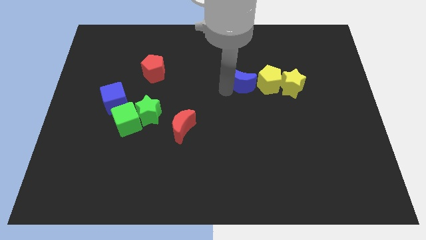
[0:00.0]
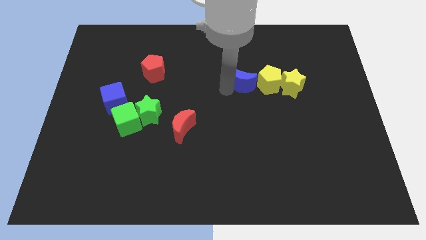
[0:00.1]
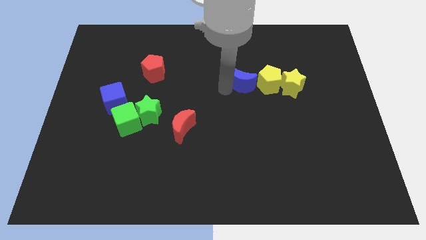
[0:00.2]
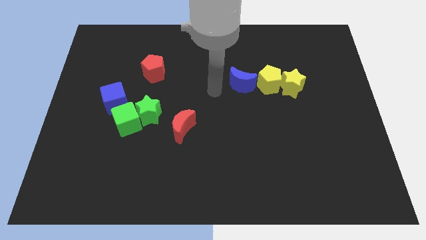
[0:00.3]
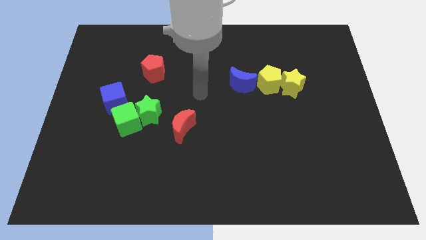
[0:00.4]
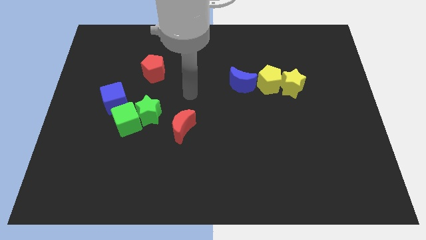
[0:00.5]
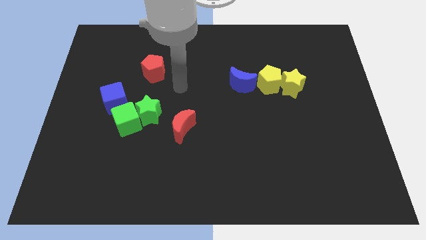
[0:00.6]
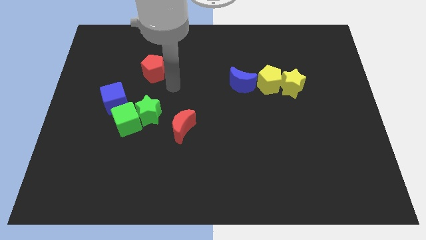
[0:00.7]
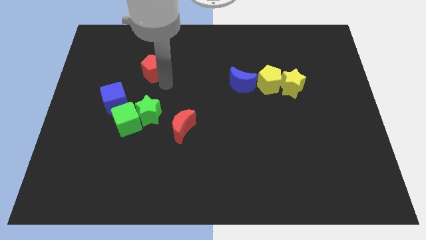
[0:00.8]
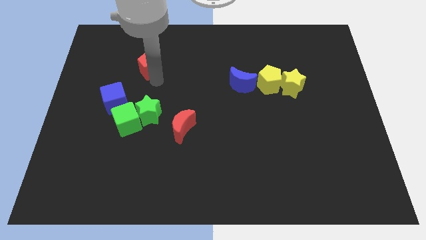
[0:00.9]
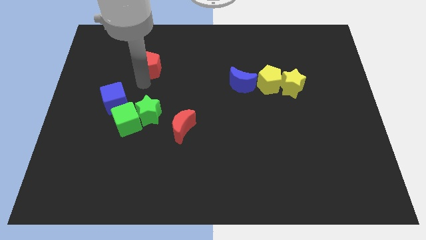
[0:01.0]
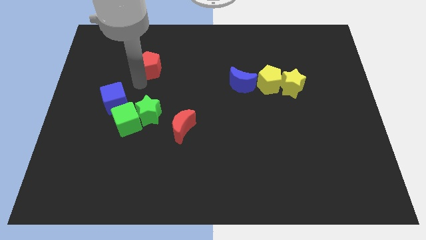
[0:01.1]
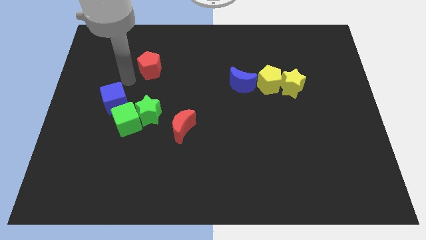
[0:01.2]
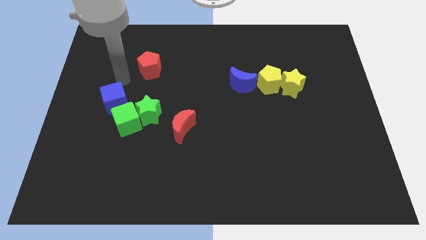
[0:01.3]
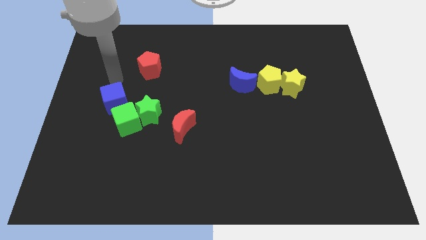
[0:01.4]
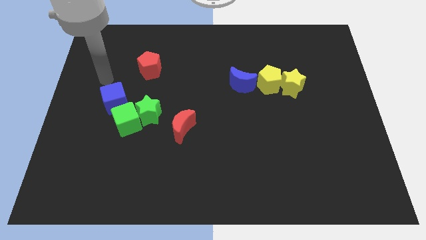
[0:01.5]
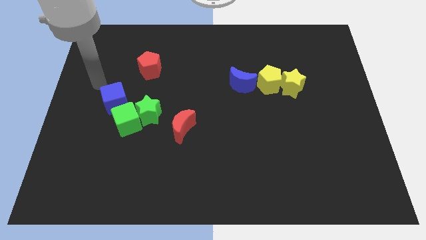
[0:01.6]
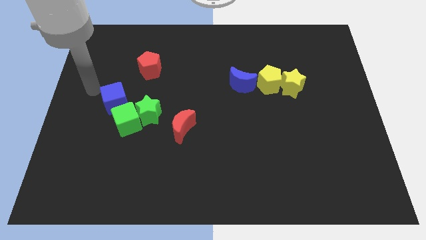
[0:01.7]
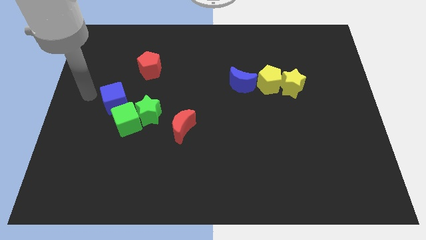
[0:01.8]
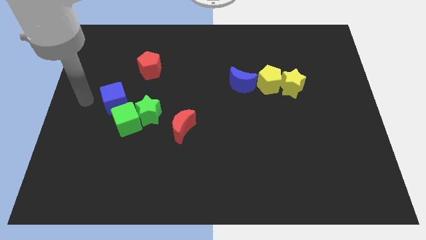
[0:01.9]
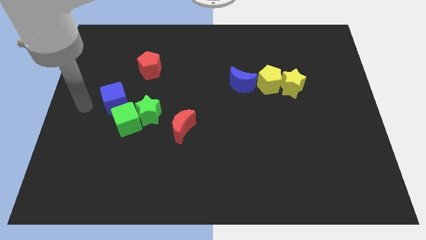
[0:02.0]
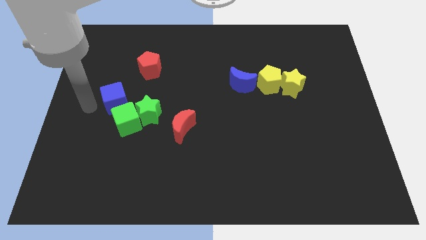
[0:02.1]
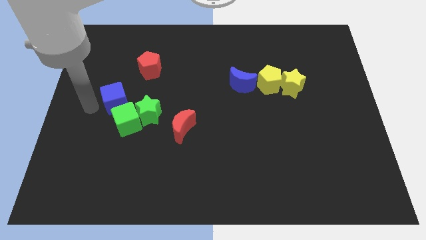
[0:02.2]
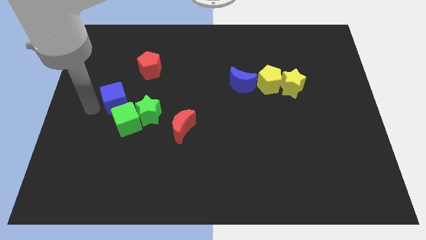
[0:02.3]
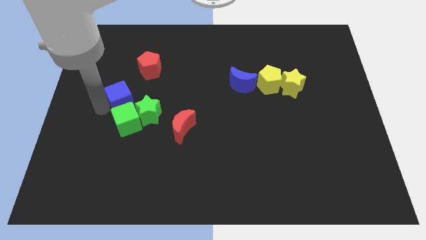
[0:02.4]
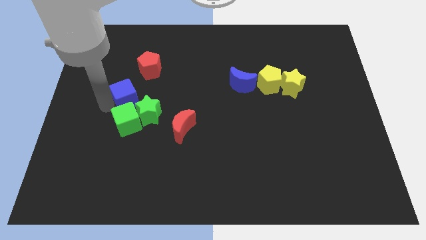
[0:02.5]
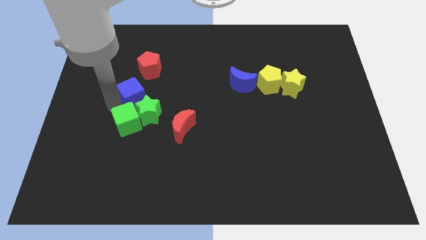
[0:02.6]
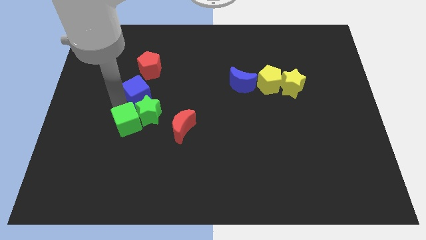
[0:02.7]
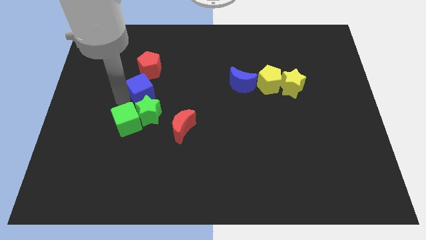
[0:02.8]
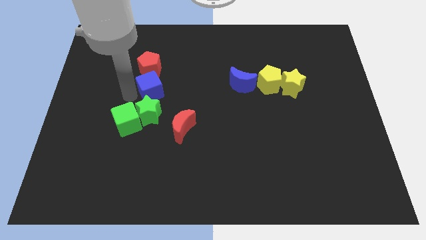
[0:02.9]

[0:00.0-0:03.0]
place blue cube to the bottom of red pentagon

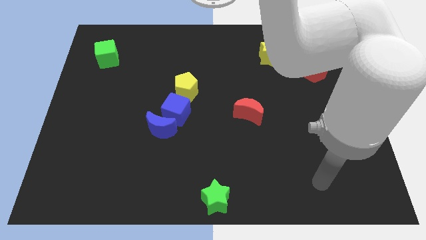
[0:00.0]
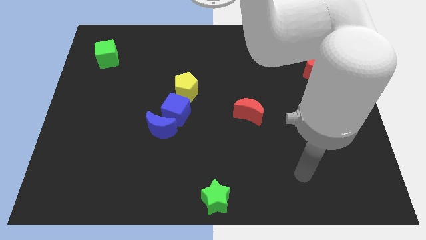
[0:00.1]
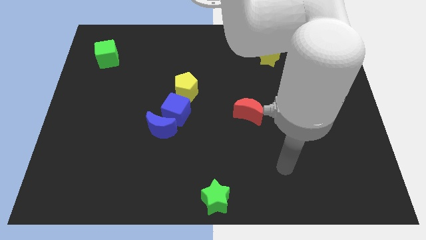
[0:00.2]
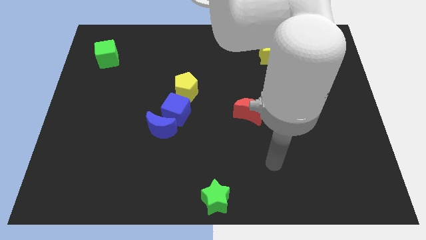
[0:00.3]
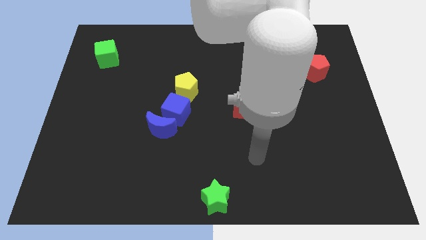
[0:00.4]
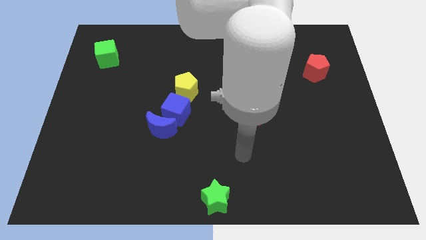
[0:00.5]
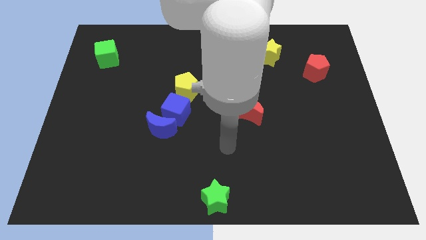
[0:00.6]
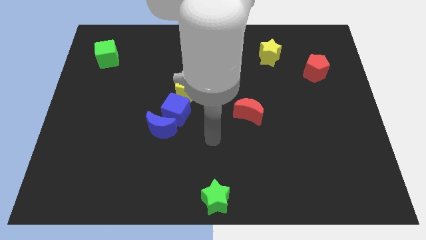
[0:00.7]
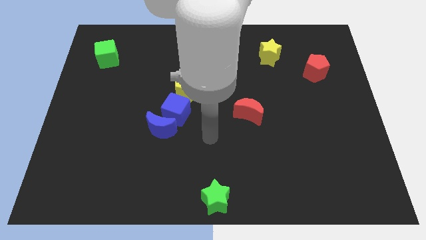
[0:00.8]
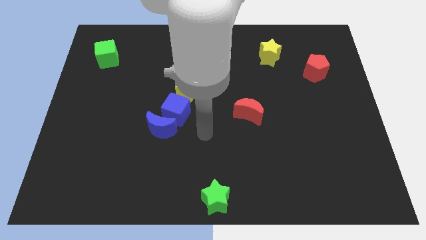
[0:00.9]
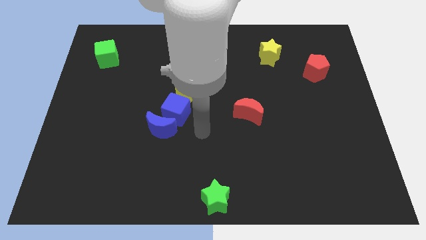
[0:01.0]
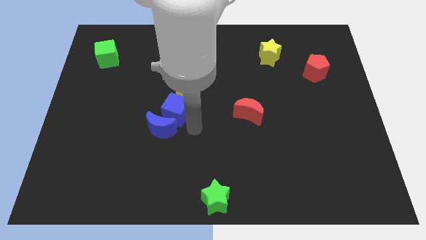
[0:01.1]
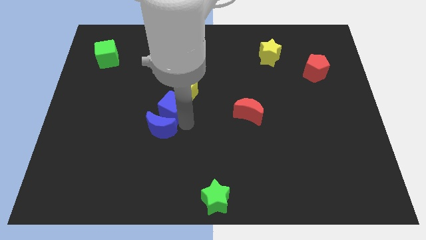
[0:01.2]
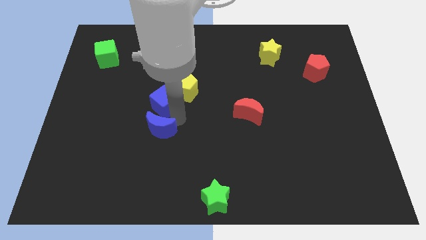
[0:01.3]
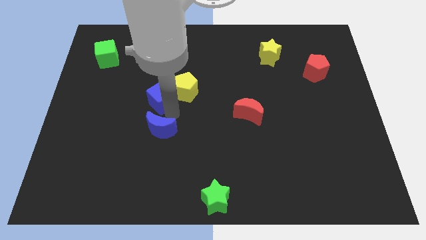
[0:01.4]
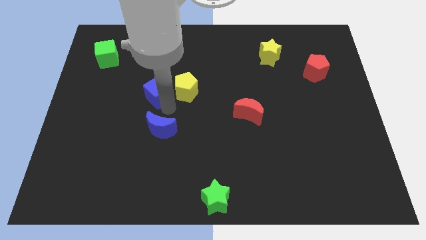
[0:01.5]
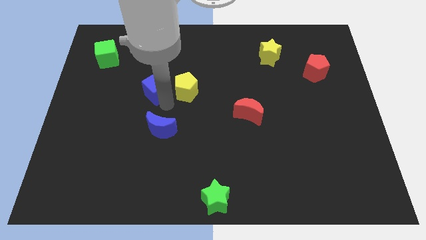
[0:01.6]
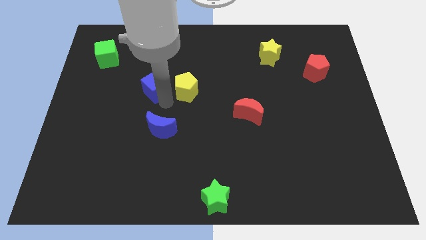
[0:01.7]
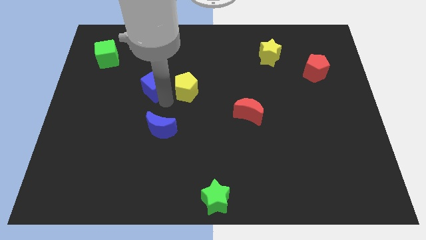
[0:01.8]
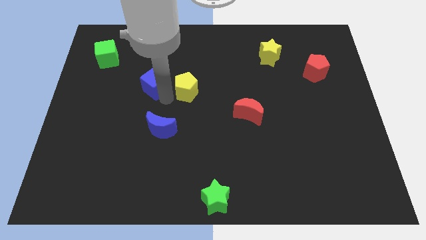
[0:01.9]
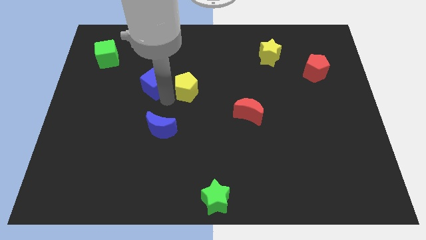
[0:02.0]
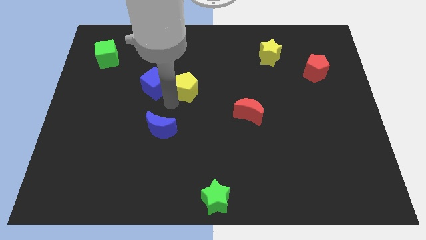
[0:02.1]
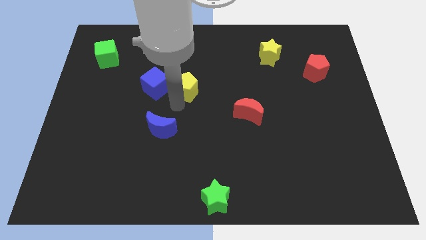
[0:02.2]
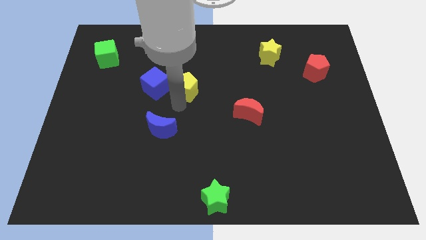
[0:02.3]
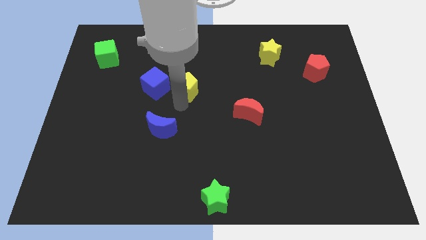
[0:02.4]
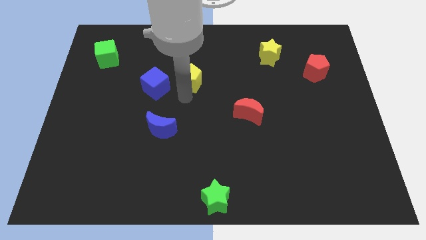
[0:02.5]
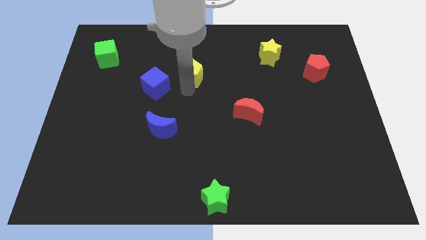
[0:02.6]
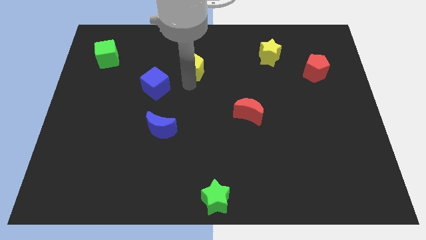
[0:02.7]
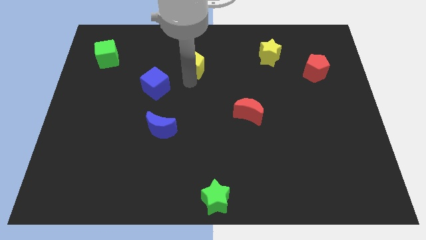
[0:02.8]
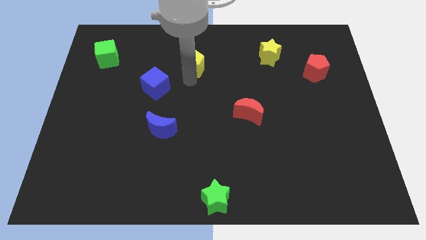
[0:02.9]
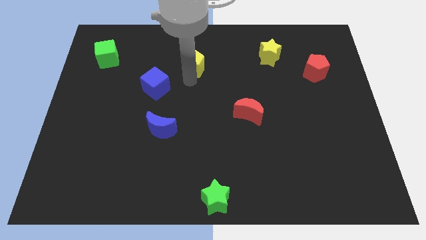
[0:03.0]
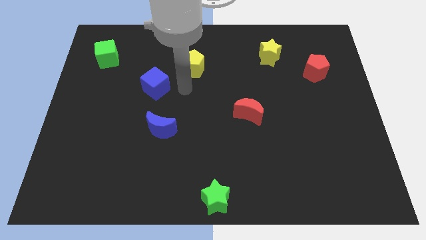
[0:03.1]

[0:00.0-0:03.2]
slightly move the yellow pentagon towards the top

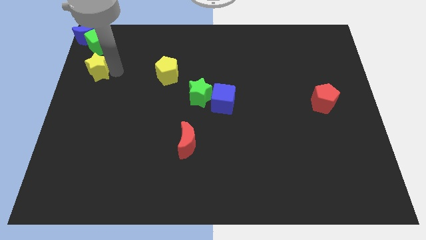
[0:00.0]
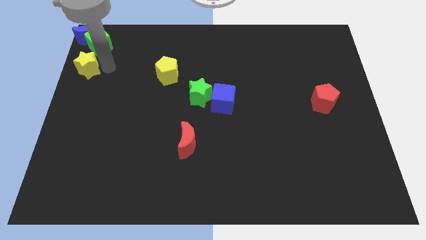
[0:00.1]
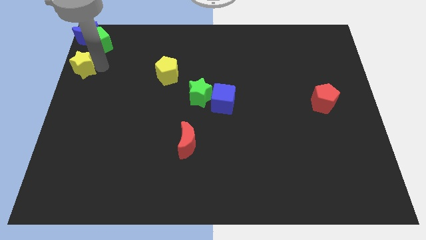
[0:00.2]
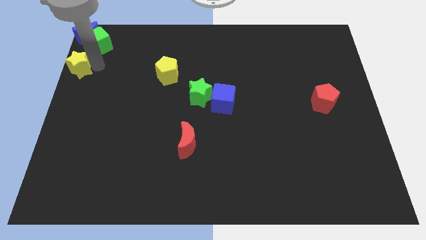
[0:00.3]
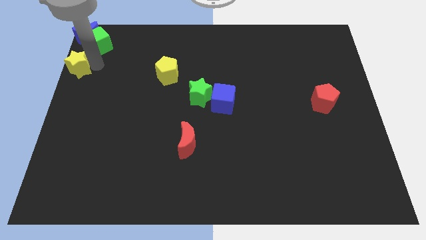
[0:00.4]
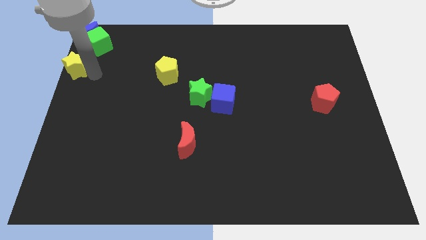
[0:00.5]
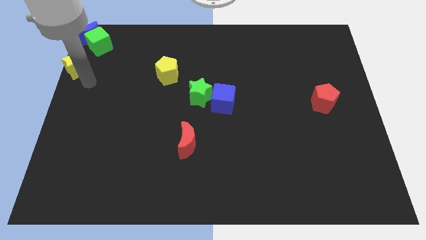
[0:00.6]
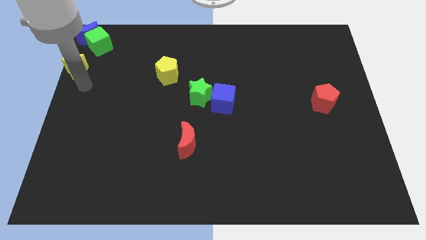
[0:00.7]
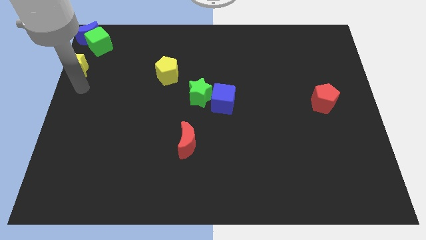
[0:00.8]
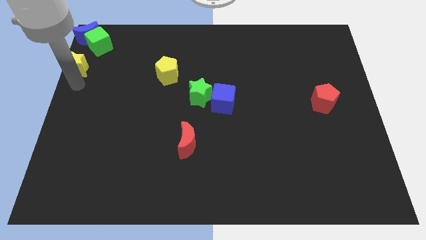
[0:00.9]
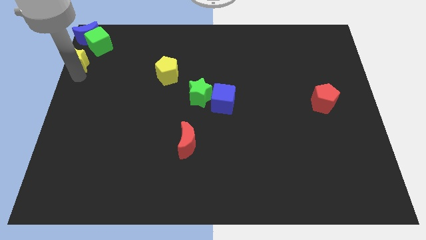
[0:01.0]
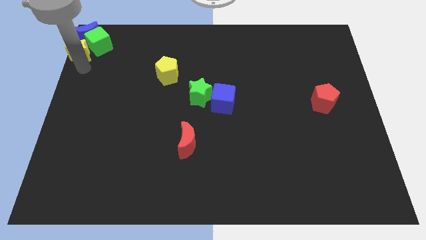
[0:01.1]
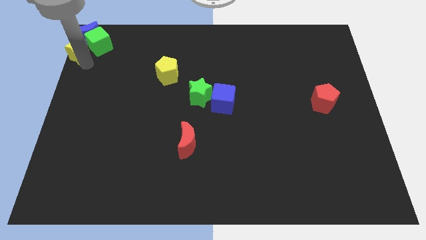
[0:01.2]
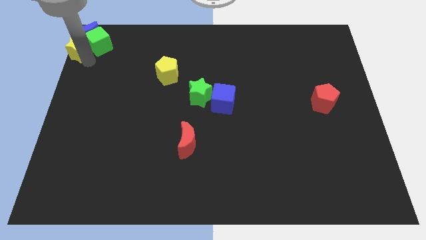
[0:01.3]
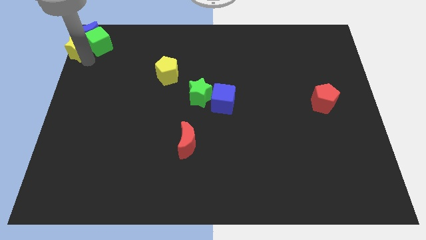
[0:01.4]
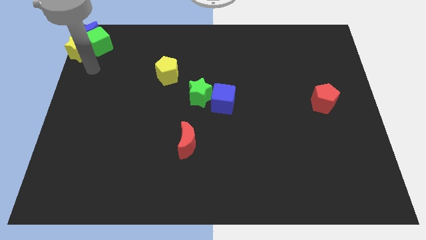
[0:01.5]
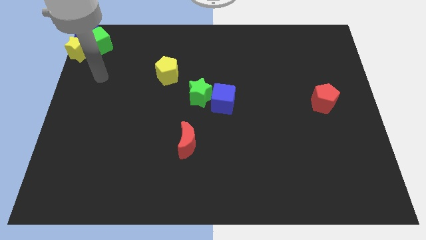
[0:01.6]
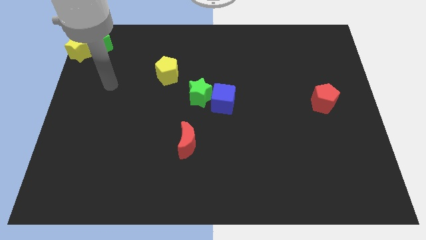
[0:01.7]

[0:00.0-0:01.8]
place the yellow star below blue moon

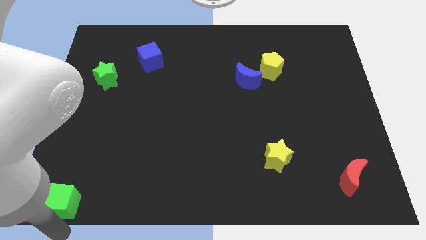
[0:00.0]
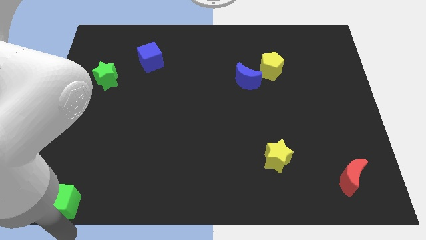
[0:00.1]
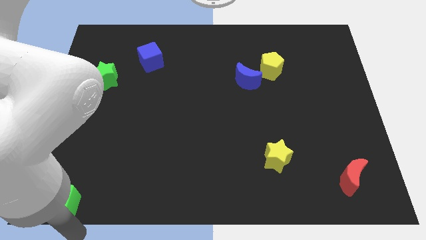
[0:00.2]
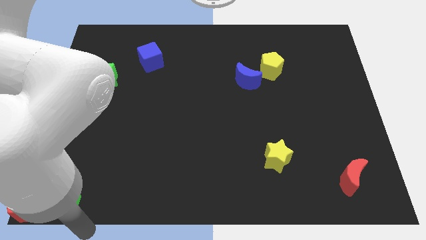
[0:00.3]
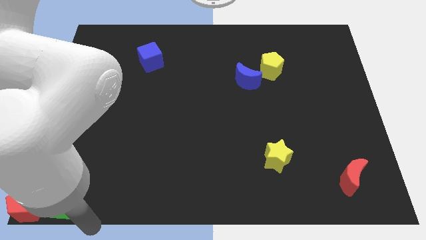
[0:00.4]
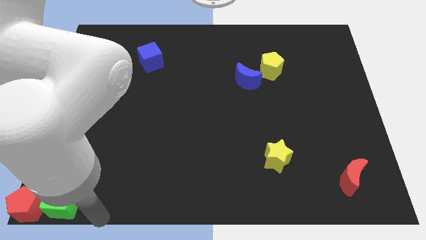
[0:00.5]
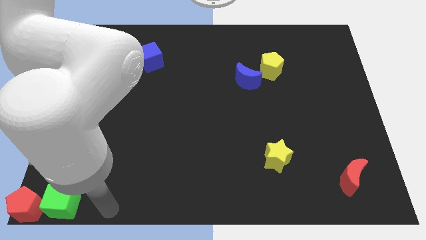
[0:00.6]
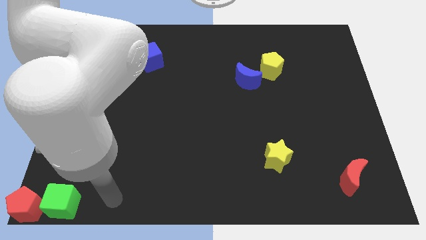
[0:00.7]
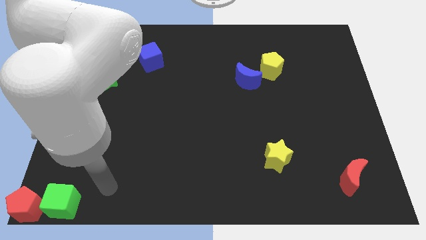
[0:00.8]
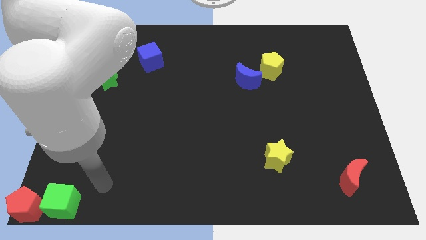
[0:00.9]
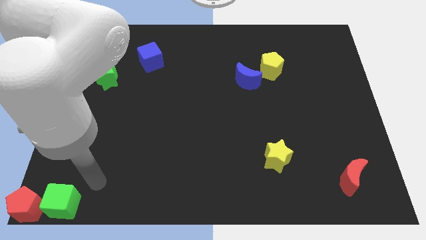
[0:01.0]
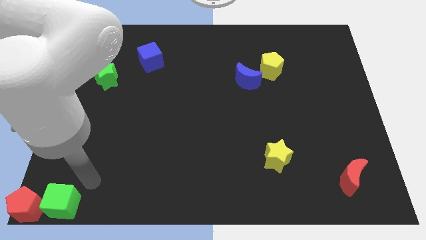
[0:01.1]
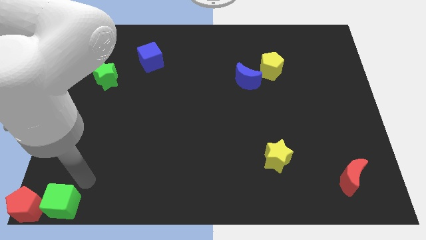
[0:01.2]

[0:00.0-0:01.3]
put your arm at the top right side of green cube
